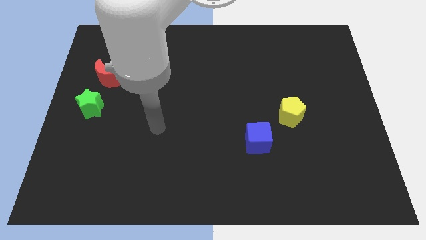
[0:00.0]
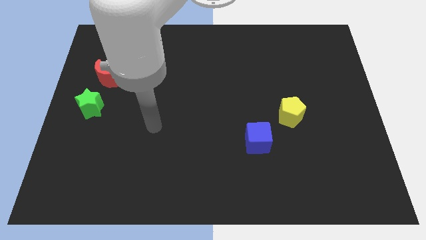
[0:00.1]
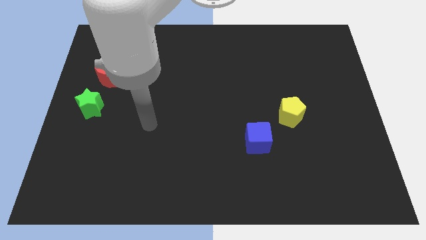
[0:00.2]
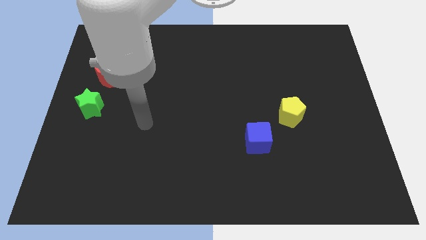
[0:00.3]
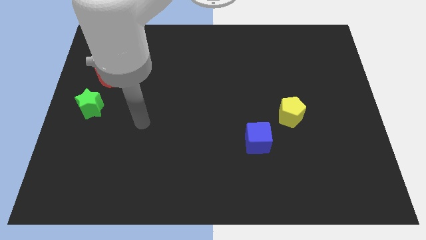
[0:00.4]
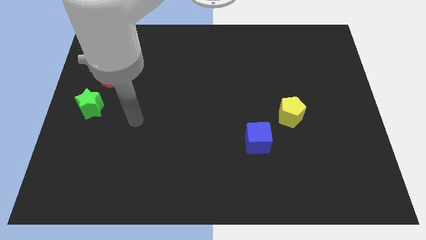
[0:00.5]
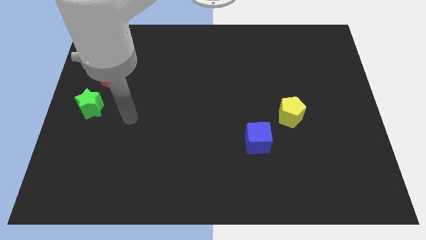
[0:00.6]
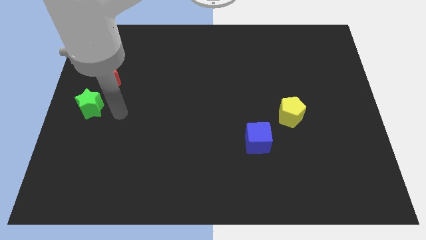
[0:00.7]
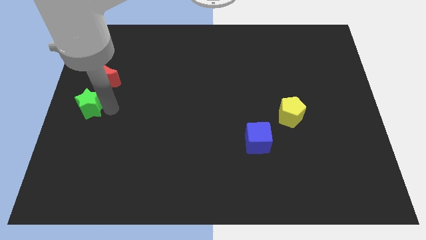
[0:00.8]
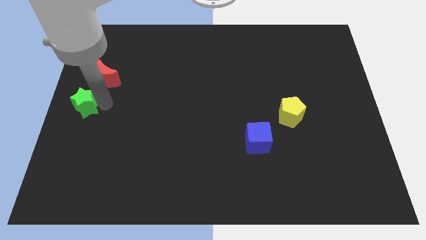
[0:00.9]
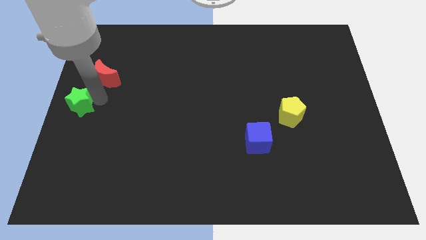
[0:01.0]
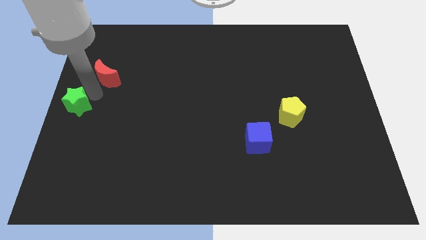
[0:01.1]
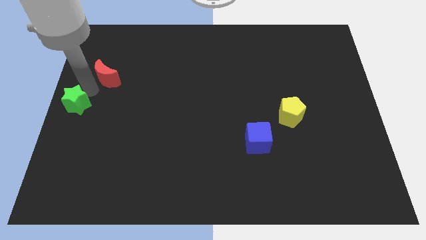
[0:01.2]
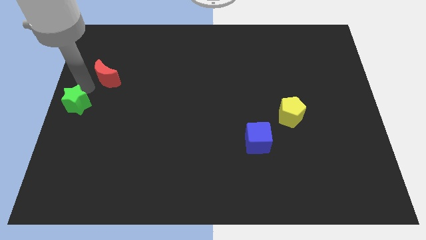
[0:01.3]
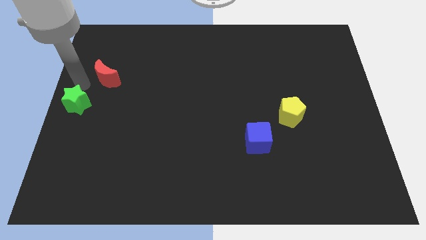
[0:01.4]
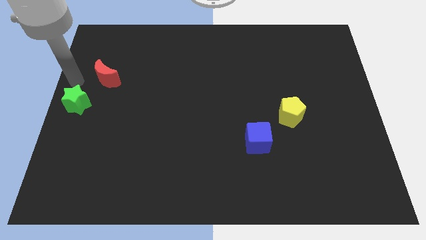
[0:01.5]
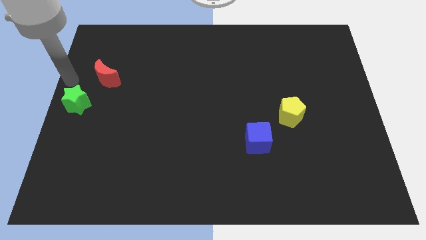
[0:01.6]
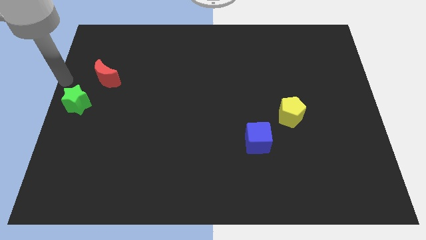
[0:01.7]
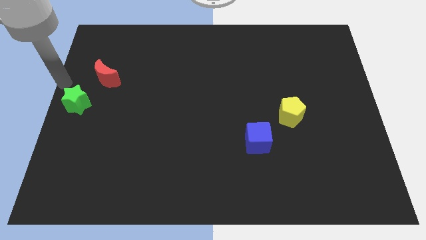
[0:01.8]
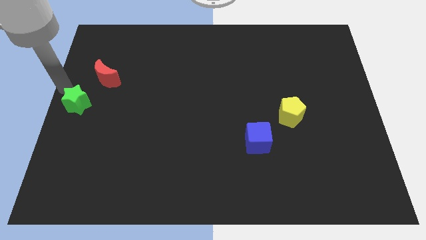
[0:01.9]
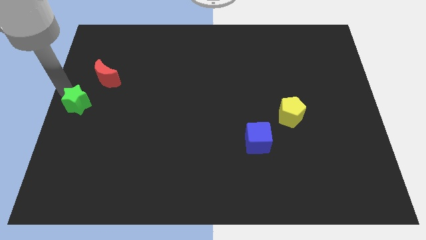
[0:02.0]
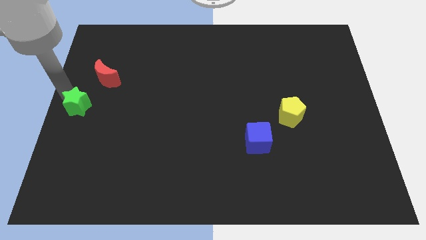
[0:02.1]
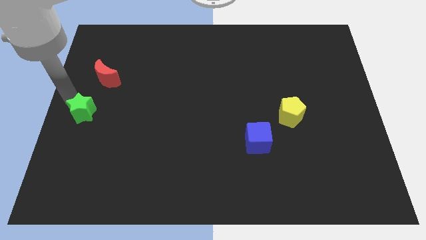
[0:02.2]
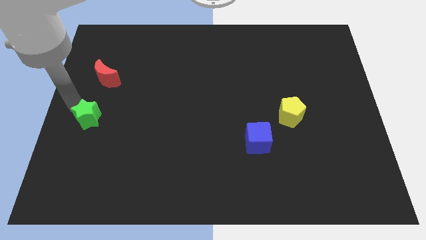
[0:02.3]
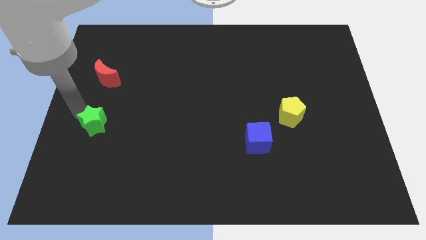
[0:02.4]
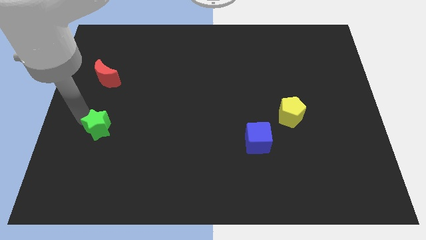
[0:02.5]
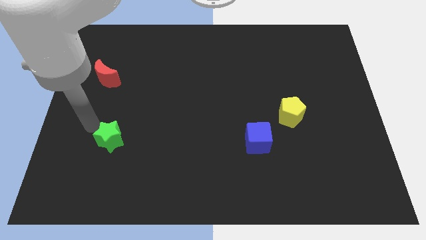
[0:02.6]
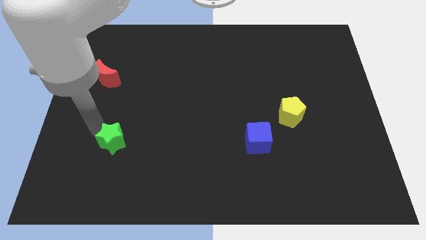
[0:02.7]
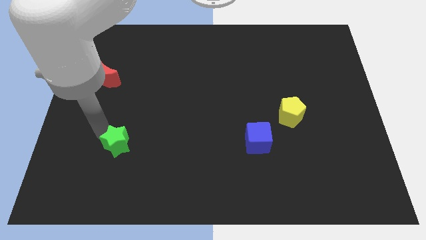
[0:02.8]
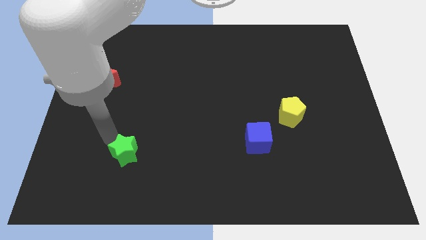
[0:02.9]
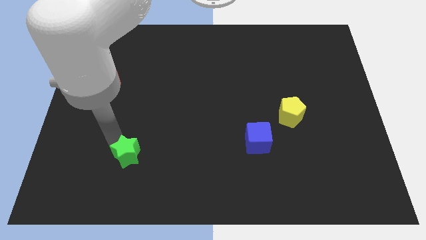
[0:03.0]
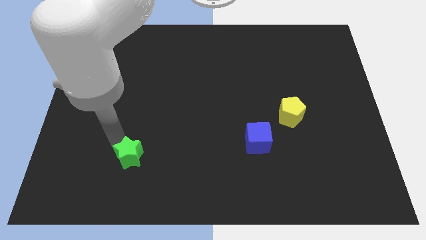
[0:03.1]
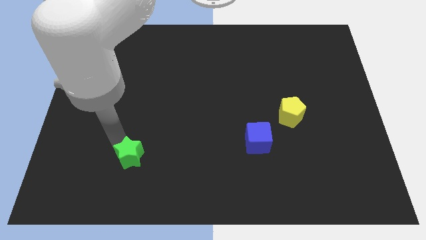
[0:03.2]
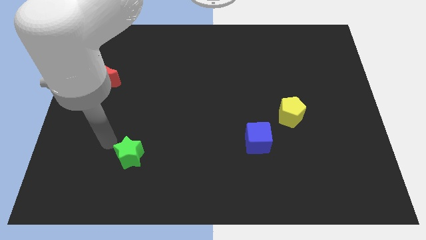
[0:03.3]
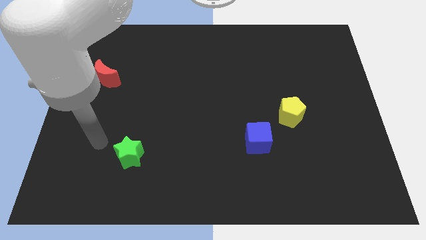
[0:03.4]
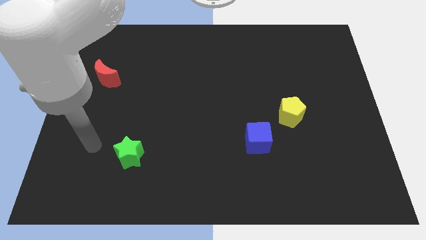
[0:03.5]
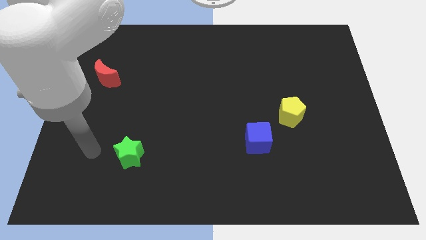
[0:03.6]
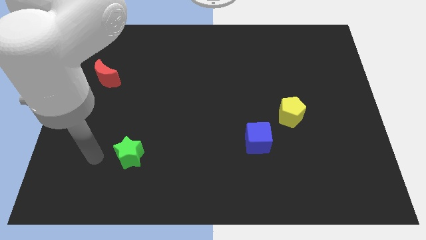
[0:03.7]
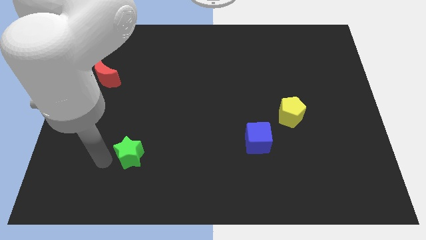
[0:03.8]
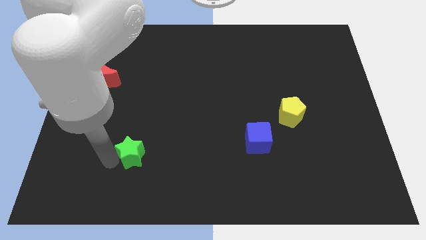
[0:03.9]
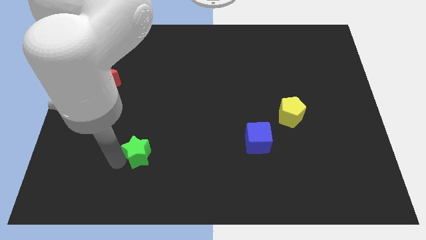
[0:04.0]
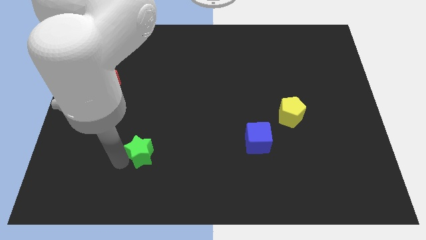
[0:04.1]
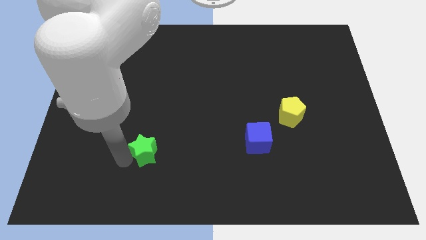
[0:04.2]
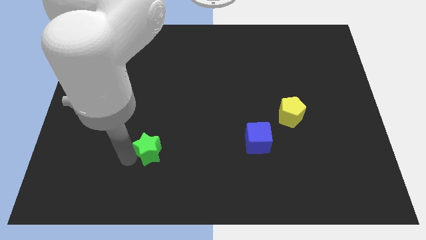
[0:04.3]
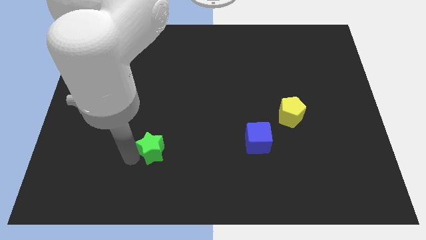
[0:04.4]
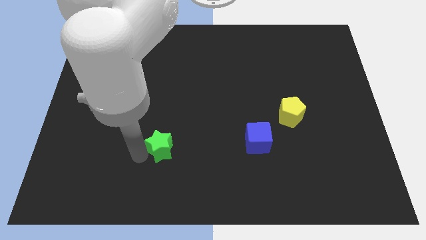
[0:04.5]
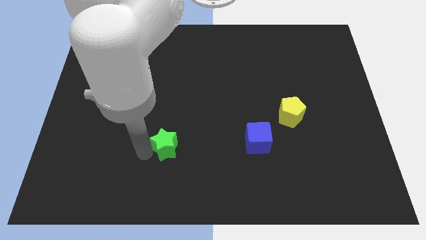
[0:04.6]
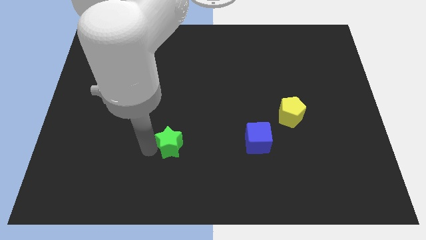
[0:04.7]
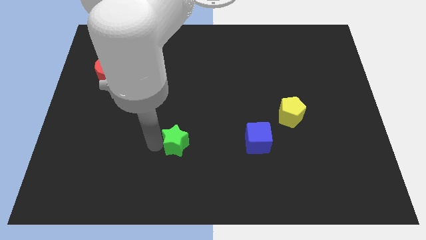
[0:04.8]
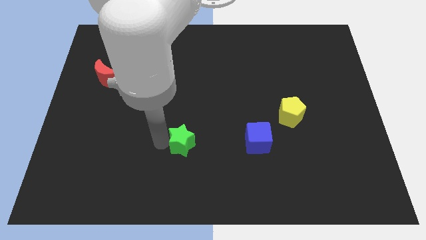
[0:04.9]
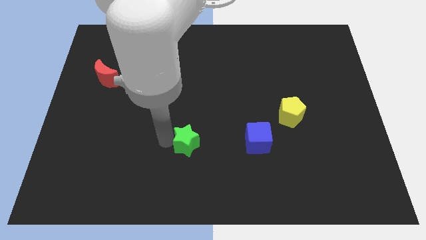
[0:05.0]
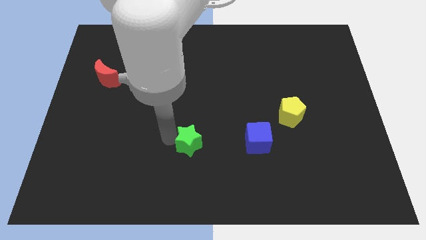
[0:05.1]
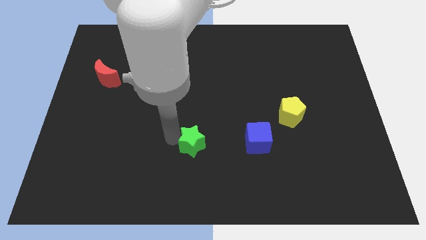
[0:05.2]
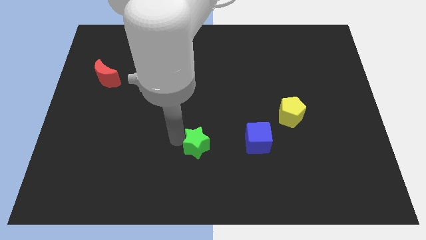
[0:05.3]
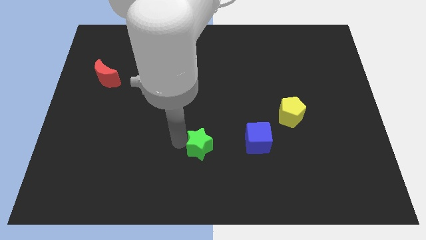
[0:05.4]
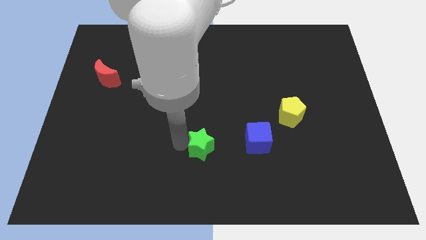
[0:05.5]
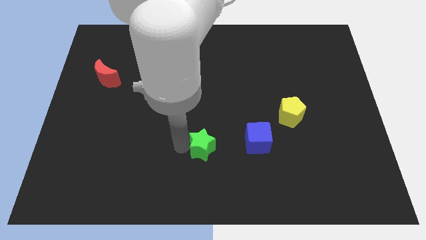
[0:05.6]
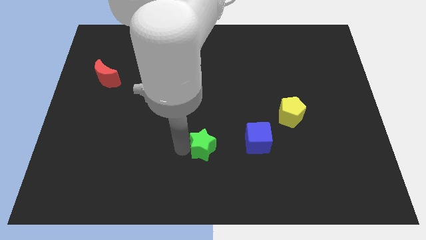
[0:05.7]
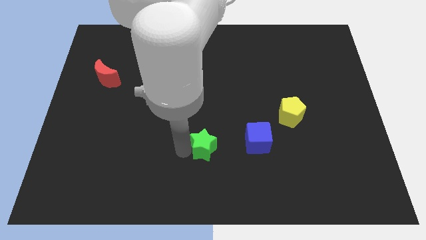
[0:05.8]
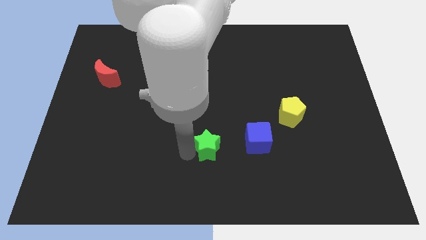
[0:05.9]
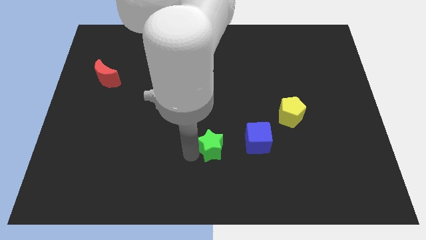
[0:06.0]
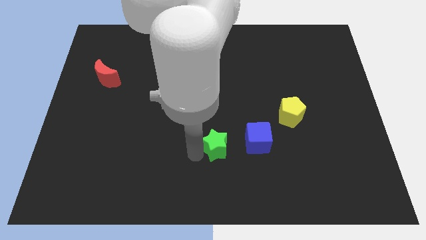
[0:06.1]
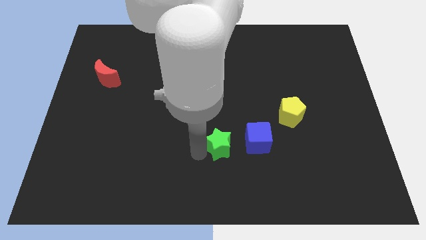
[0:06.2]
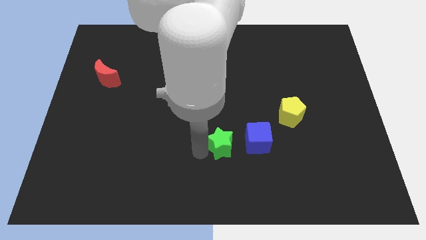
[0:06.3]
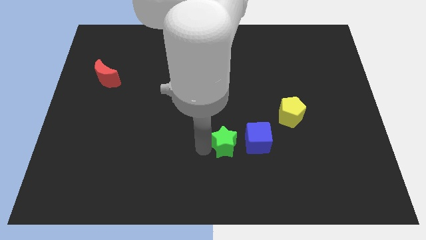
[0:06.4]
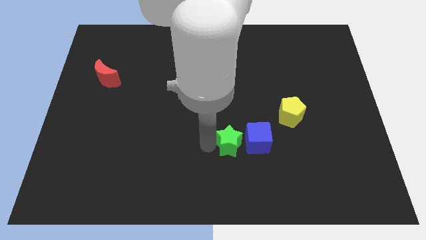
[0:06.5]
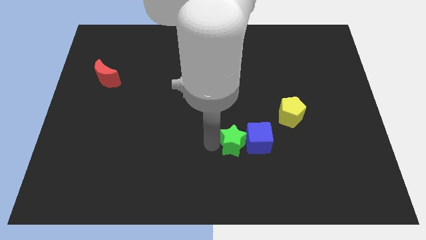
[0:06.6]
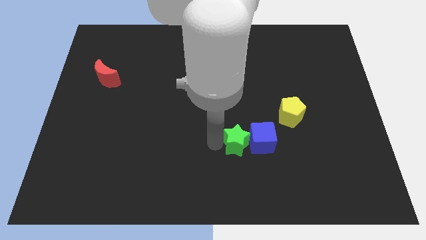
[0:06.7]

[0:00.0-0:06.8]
slide the star close to the cube

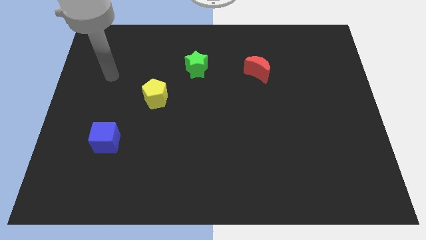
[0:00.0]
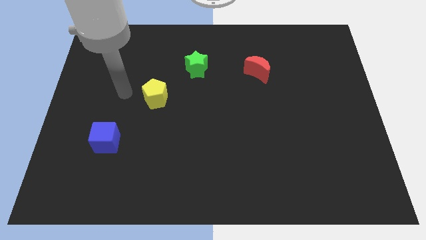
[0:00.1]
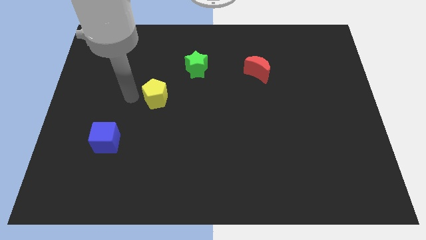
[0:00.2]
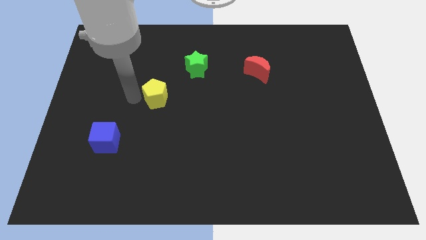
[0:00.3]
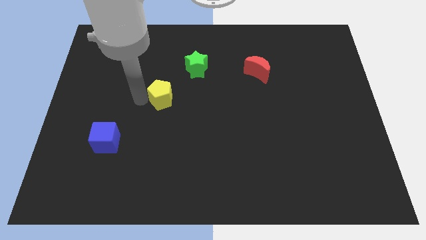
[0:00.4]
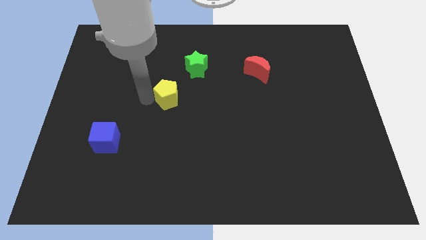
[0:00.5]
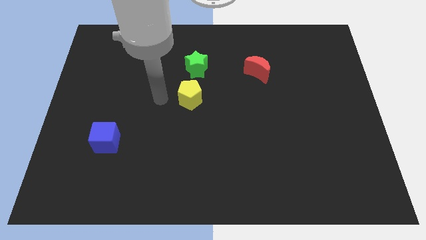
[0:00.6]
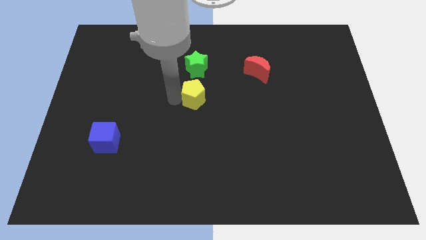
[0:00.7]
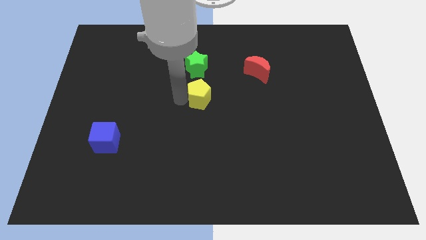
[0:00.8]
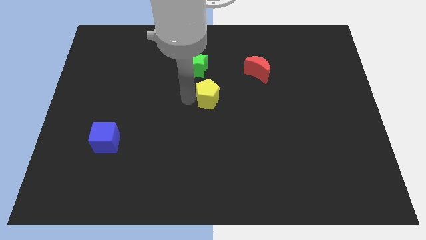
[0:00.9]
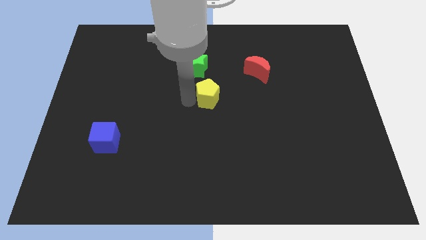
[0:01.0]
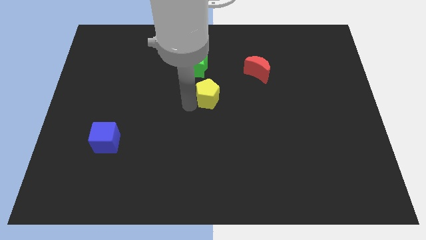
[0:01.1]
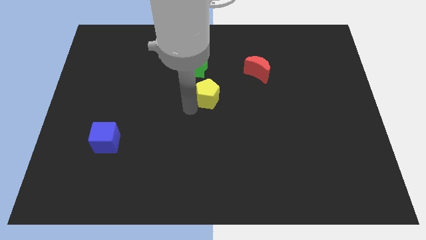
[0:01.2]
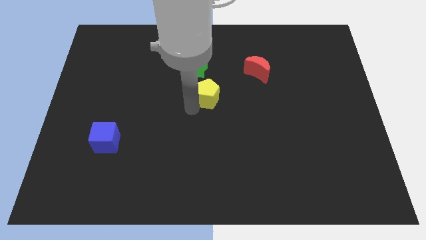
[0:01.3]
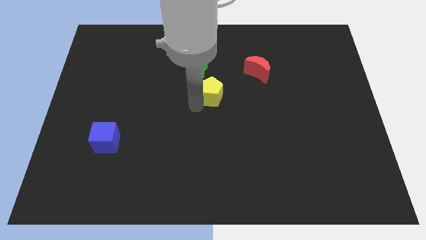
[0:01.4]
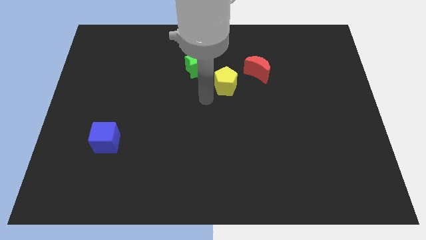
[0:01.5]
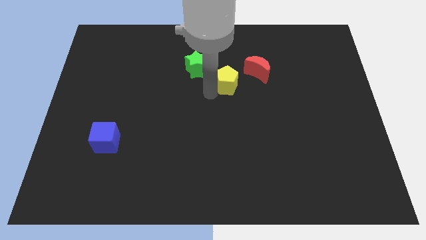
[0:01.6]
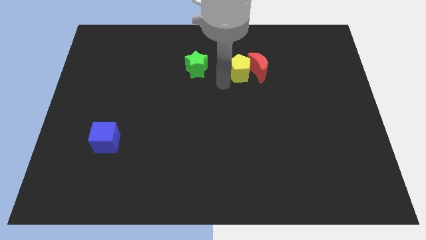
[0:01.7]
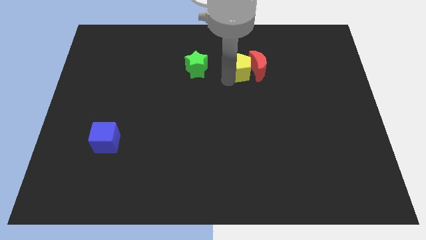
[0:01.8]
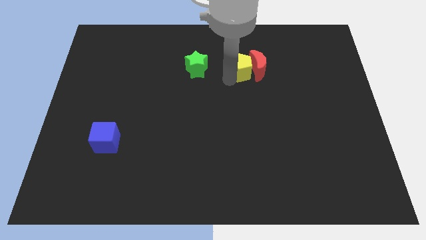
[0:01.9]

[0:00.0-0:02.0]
put the yellow block to the moon
